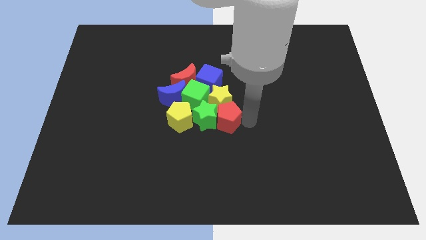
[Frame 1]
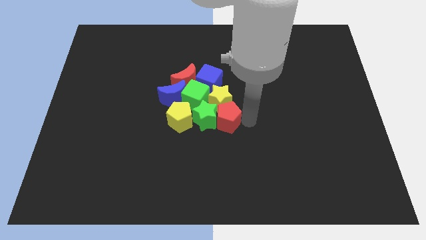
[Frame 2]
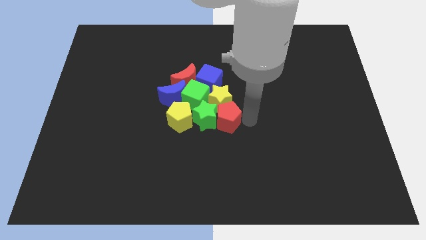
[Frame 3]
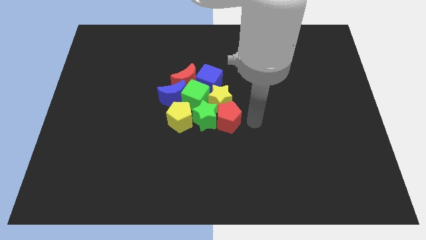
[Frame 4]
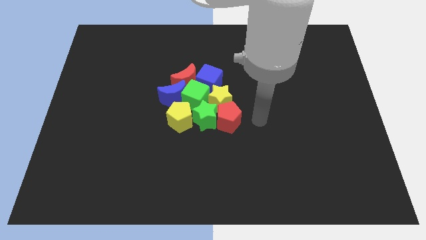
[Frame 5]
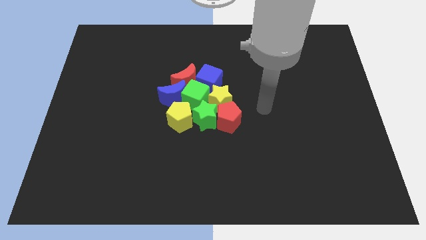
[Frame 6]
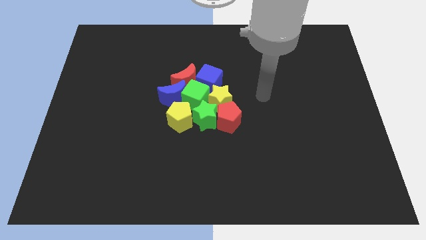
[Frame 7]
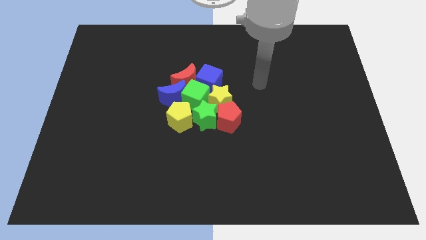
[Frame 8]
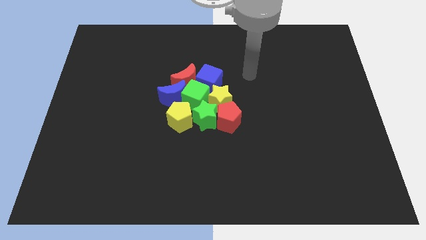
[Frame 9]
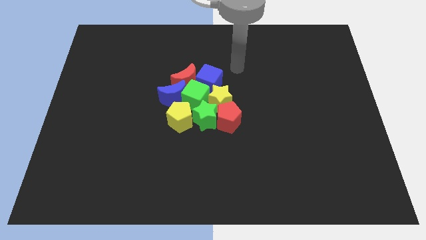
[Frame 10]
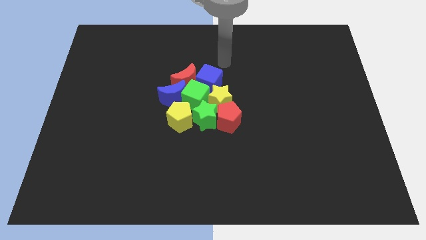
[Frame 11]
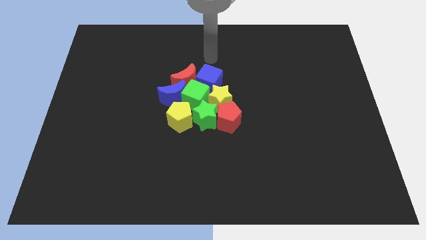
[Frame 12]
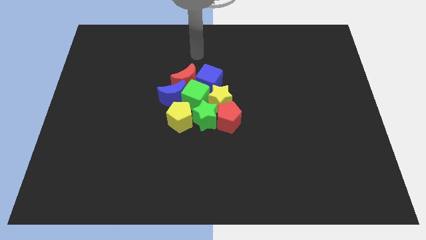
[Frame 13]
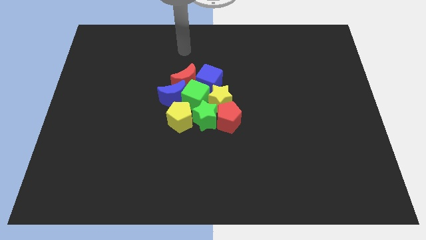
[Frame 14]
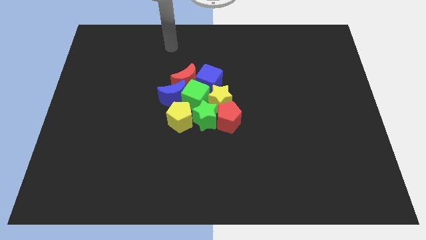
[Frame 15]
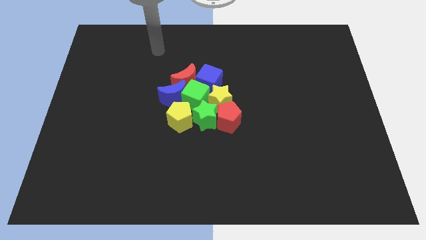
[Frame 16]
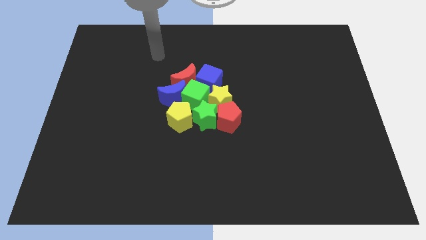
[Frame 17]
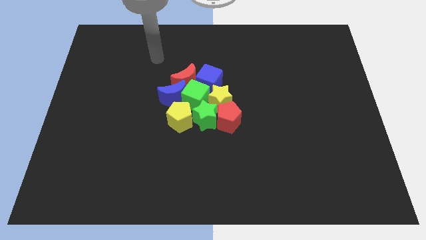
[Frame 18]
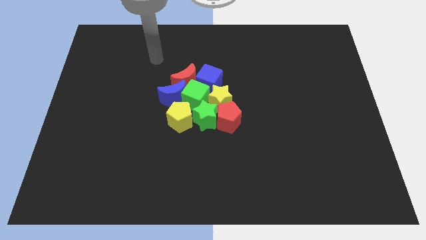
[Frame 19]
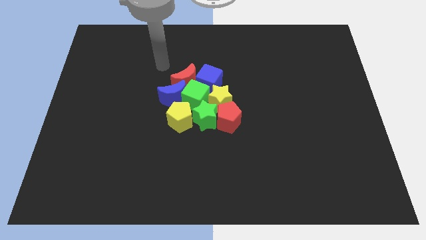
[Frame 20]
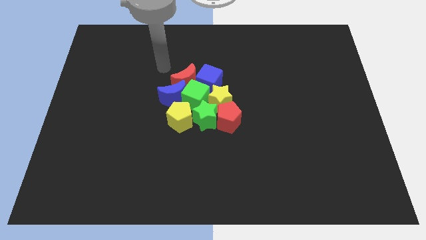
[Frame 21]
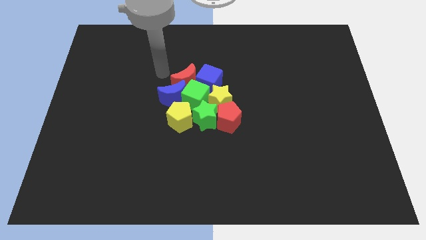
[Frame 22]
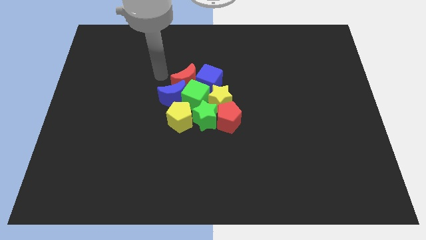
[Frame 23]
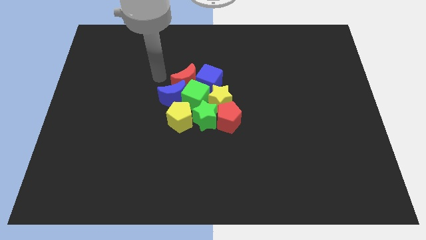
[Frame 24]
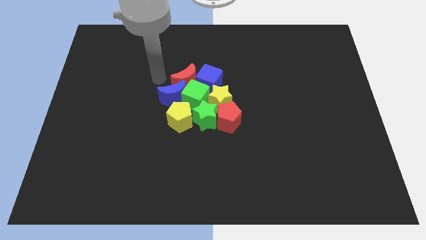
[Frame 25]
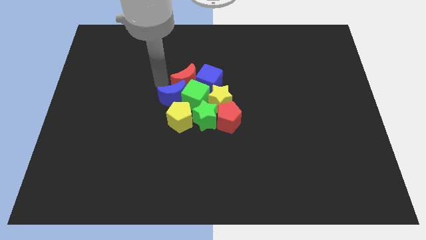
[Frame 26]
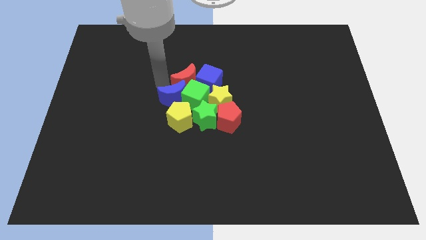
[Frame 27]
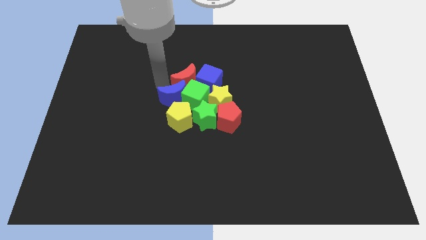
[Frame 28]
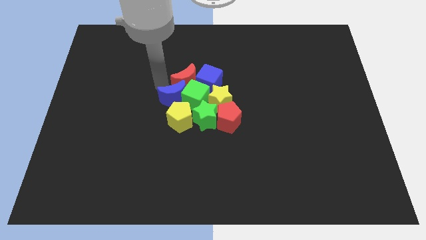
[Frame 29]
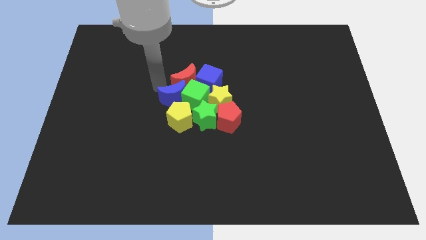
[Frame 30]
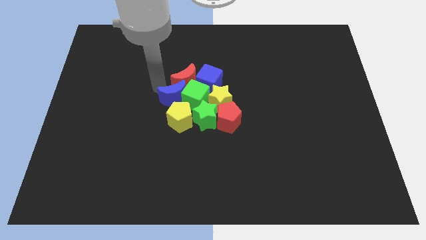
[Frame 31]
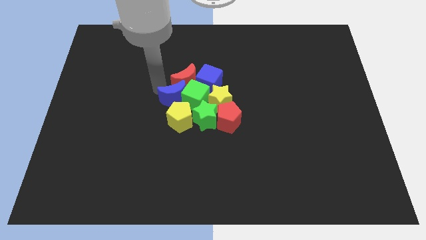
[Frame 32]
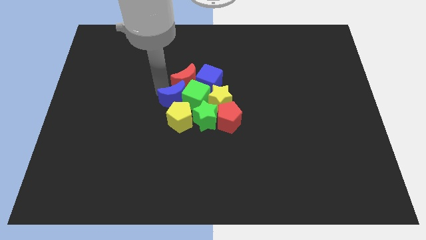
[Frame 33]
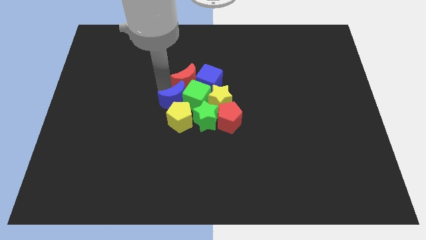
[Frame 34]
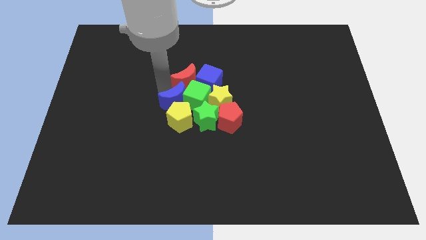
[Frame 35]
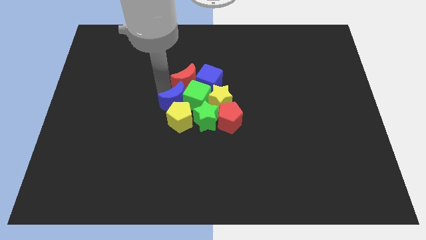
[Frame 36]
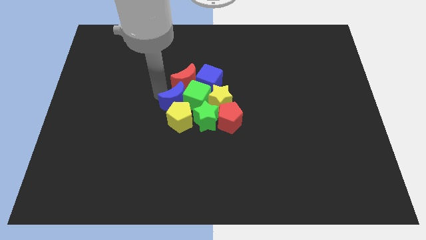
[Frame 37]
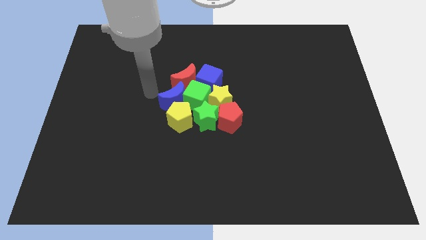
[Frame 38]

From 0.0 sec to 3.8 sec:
move the blue crescent into the yellow pentagon

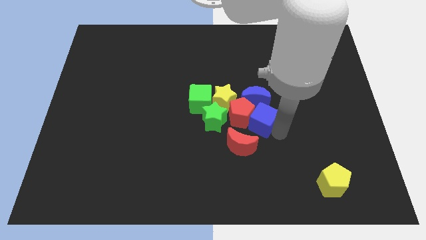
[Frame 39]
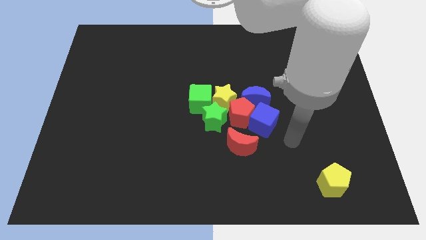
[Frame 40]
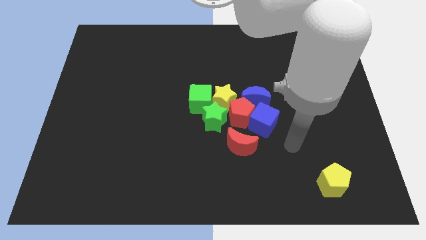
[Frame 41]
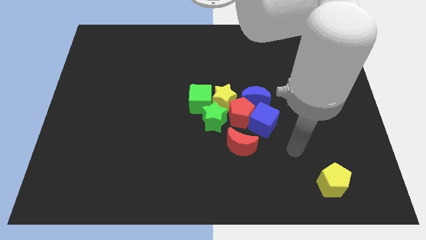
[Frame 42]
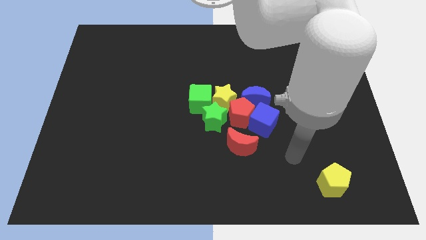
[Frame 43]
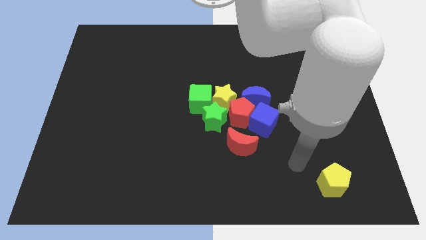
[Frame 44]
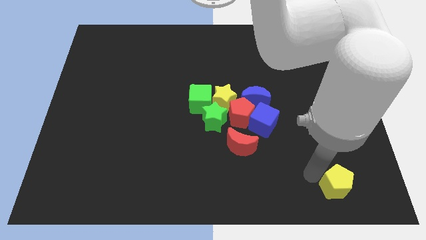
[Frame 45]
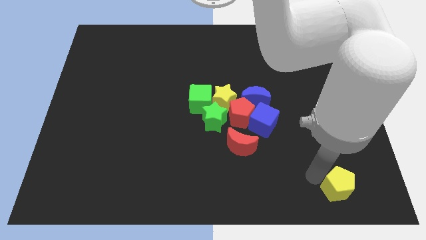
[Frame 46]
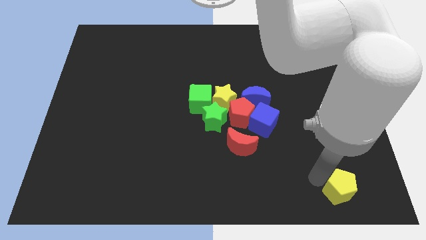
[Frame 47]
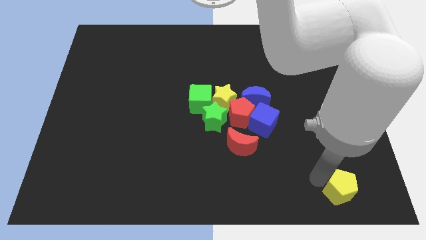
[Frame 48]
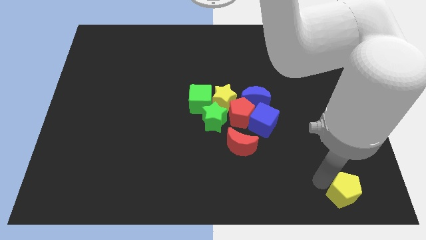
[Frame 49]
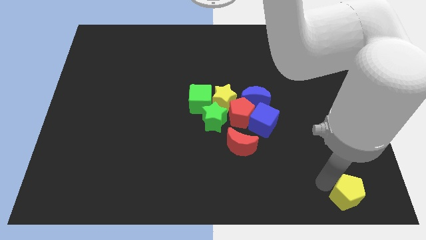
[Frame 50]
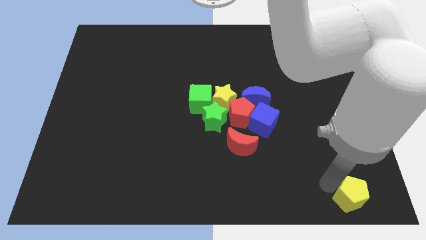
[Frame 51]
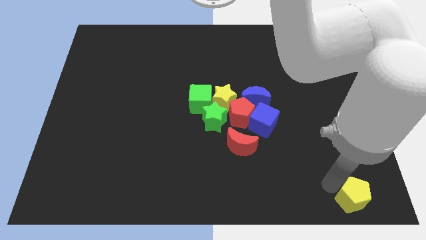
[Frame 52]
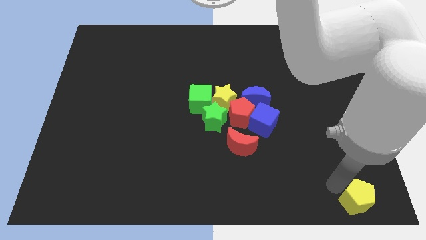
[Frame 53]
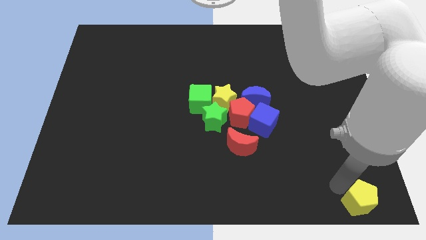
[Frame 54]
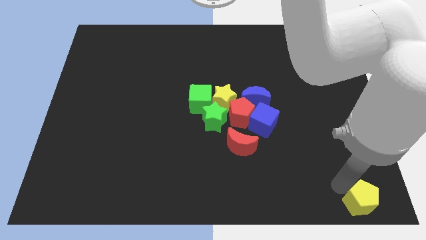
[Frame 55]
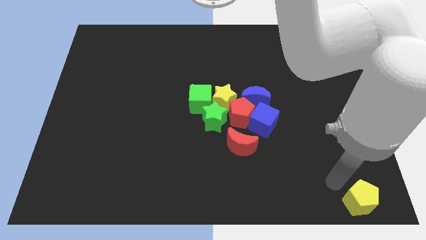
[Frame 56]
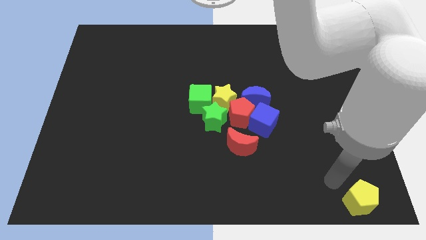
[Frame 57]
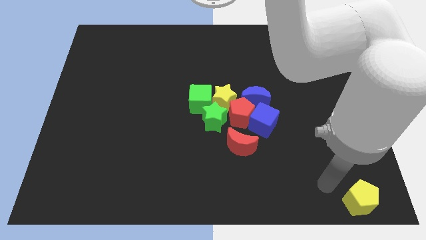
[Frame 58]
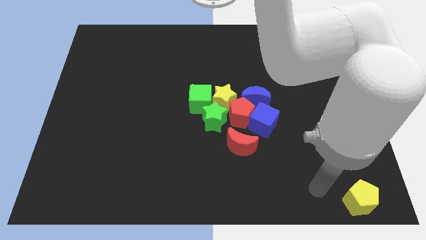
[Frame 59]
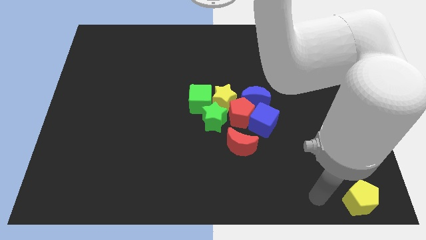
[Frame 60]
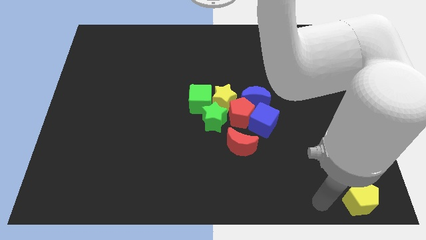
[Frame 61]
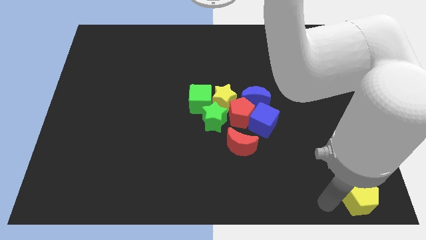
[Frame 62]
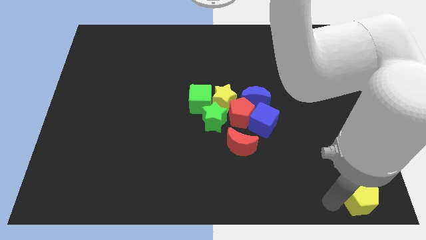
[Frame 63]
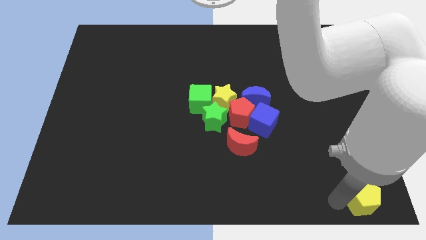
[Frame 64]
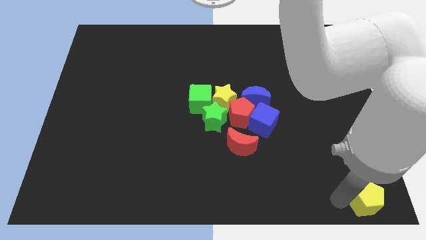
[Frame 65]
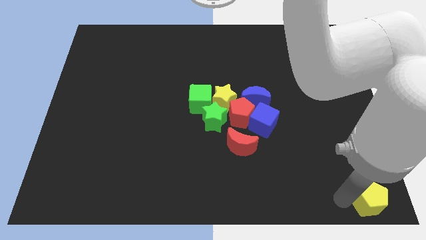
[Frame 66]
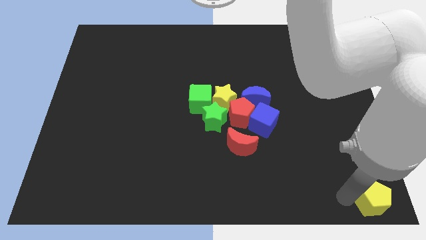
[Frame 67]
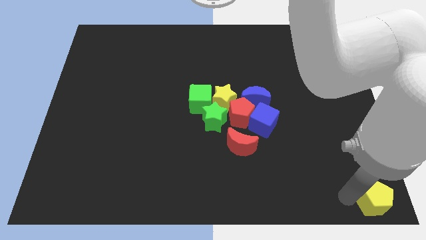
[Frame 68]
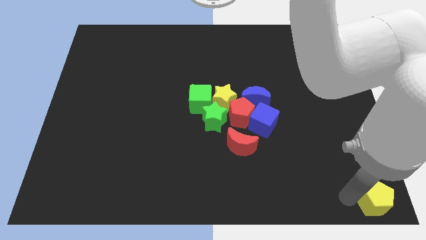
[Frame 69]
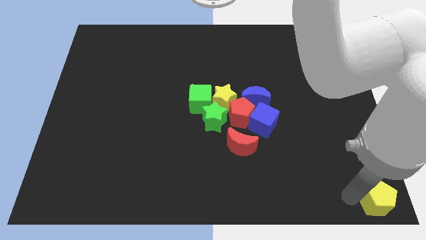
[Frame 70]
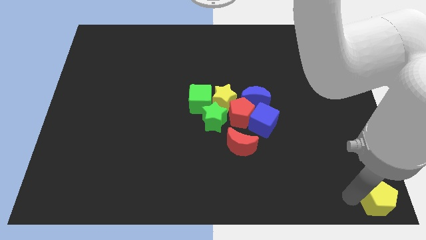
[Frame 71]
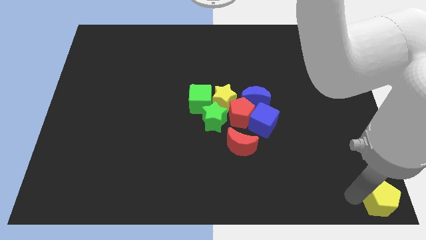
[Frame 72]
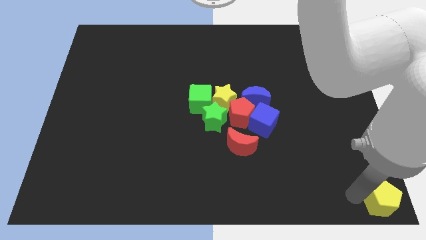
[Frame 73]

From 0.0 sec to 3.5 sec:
place the yellow pentagon at the bottom right corner of the board

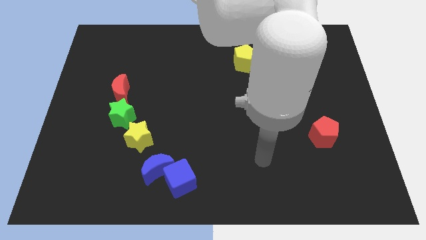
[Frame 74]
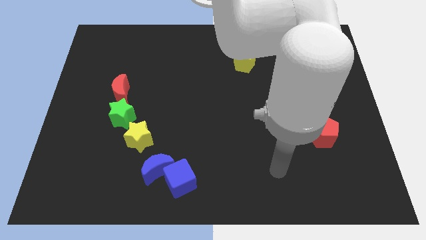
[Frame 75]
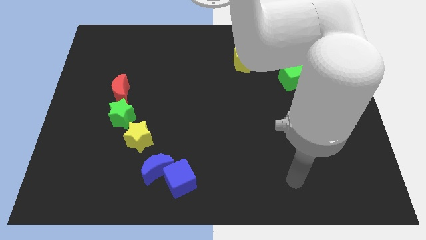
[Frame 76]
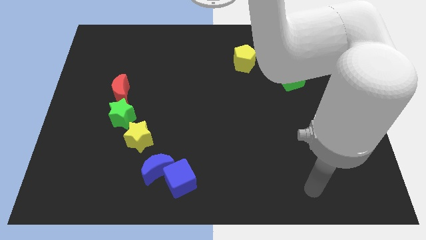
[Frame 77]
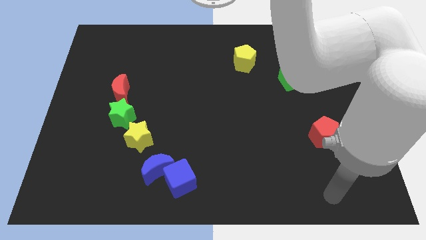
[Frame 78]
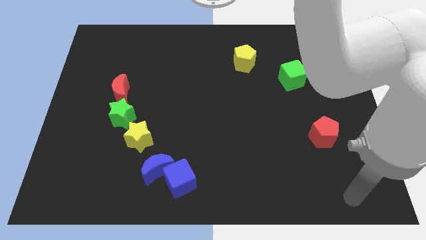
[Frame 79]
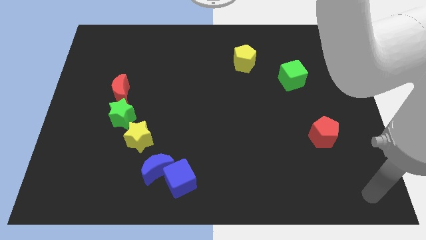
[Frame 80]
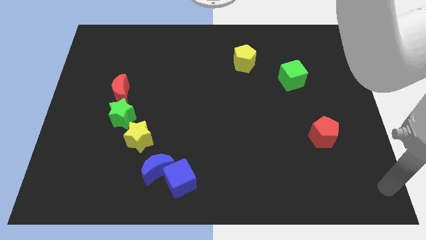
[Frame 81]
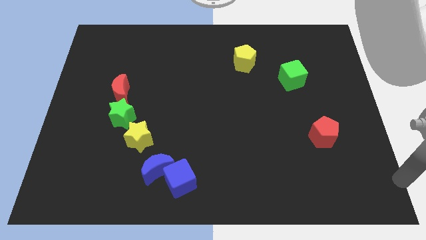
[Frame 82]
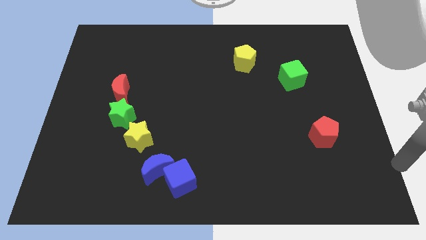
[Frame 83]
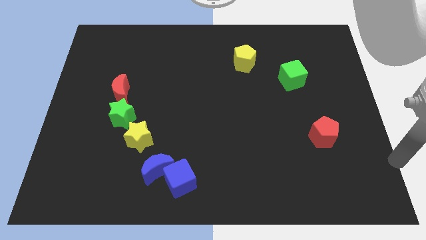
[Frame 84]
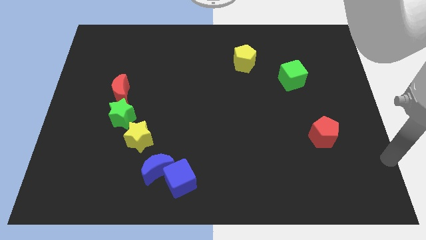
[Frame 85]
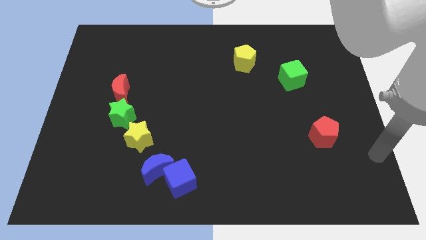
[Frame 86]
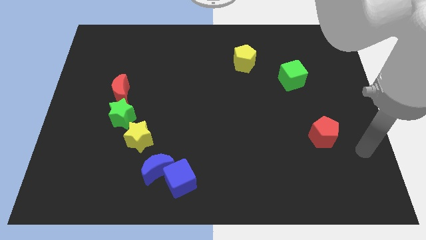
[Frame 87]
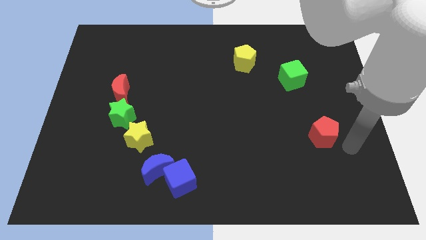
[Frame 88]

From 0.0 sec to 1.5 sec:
move your arm towards the red pentagon

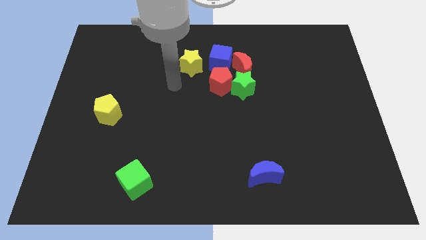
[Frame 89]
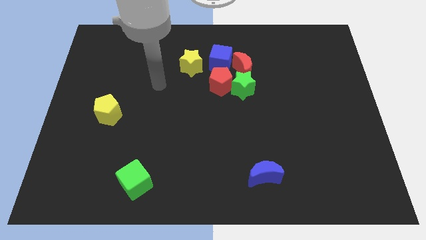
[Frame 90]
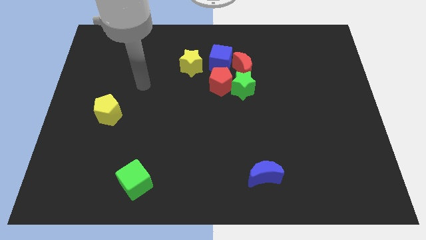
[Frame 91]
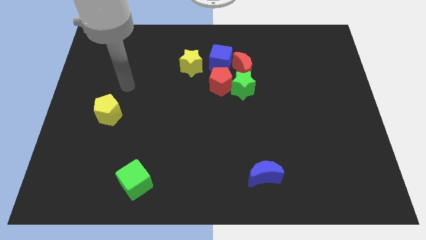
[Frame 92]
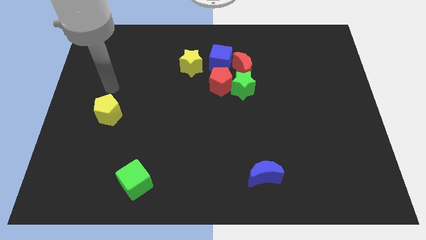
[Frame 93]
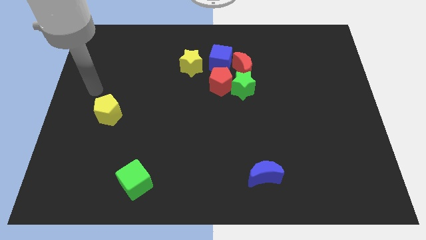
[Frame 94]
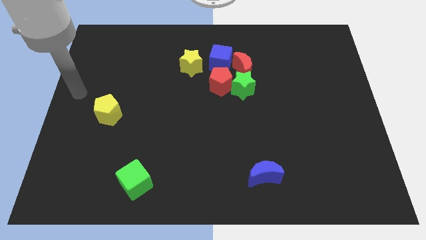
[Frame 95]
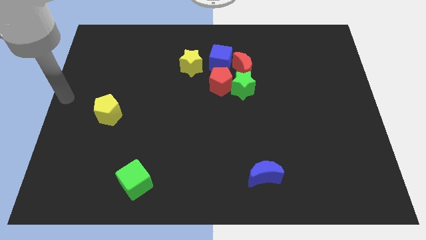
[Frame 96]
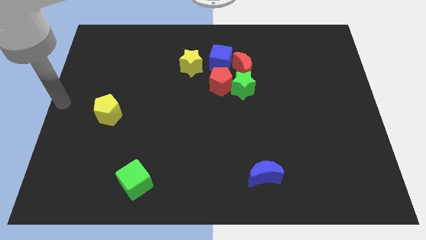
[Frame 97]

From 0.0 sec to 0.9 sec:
place your arm at the center left of the board
